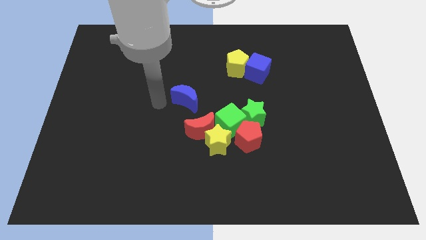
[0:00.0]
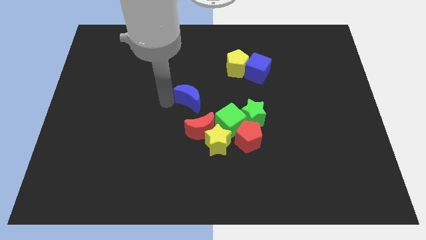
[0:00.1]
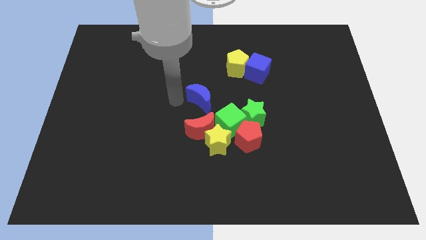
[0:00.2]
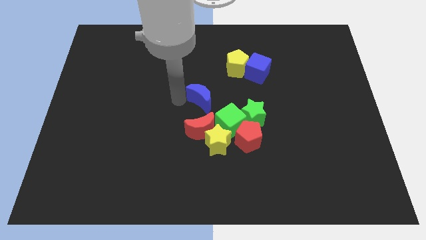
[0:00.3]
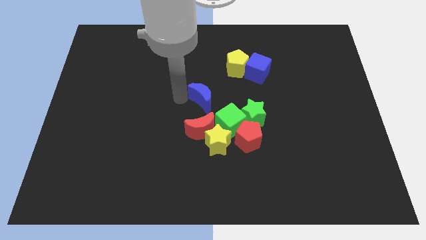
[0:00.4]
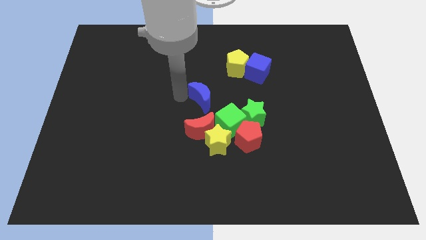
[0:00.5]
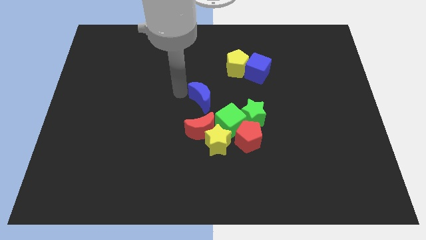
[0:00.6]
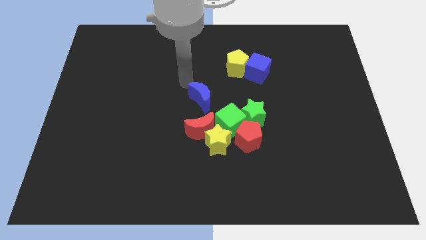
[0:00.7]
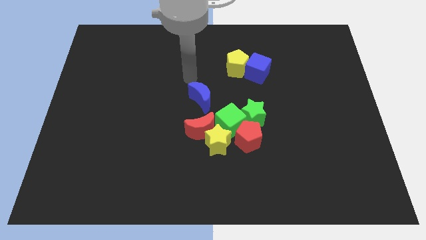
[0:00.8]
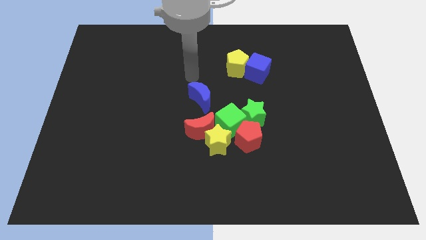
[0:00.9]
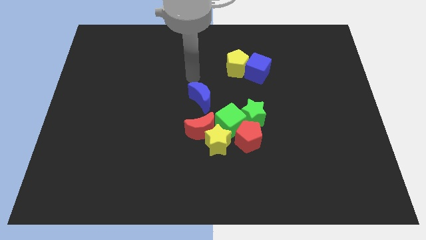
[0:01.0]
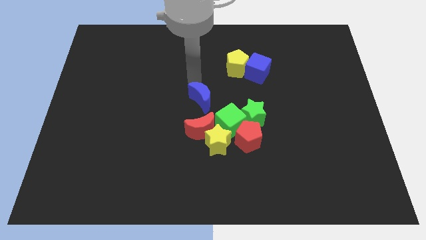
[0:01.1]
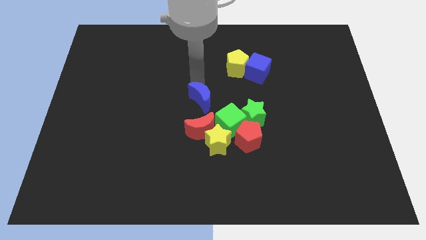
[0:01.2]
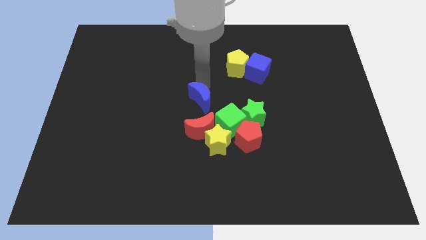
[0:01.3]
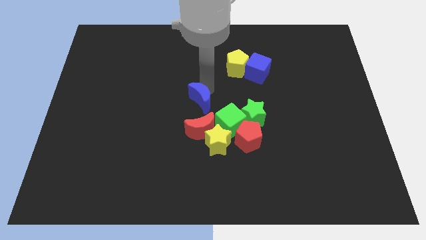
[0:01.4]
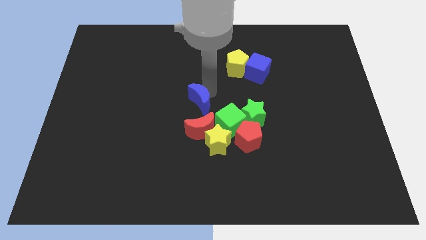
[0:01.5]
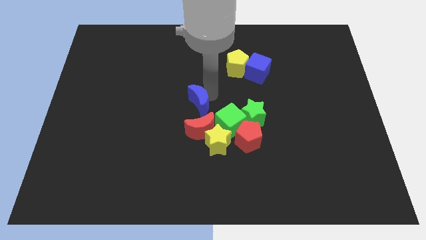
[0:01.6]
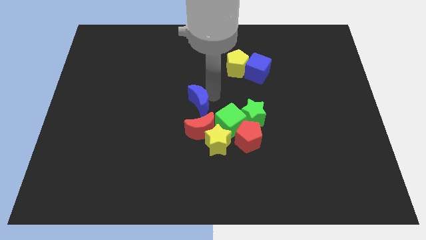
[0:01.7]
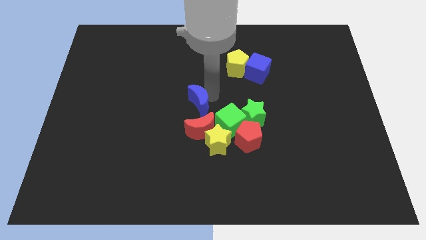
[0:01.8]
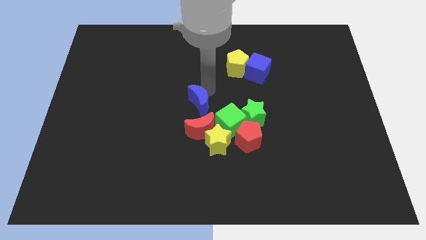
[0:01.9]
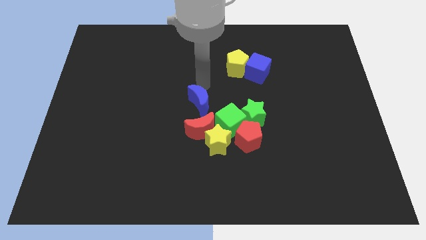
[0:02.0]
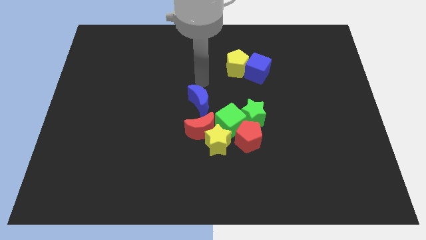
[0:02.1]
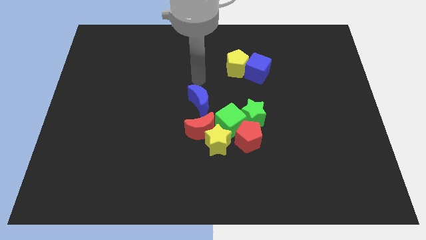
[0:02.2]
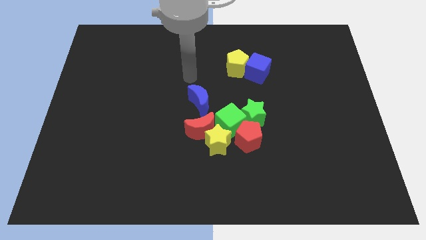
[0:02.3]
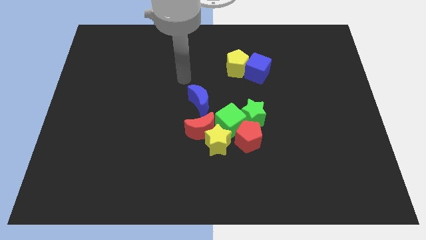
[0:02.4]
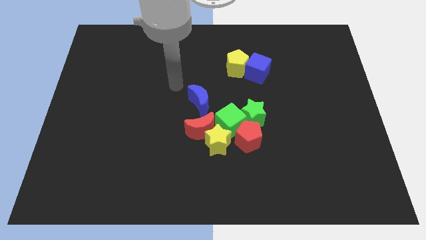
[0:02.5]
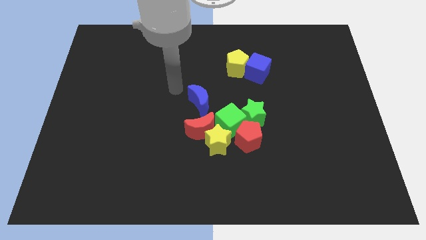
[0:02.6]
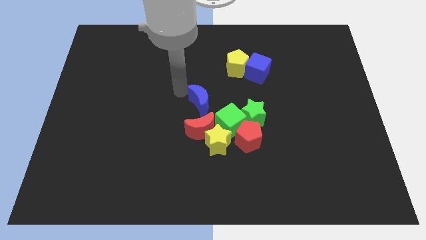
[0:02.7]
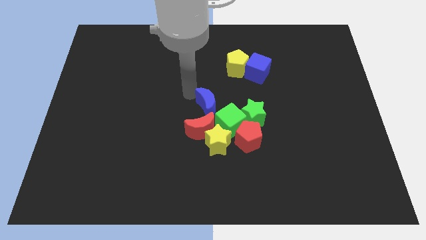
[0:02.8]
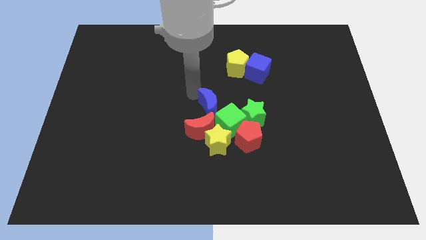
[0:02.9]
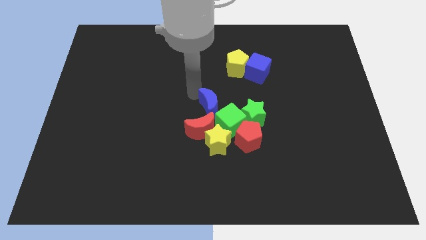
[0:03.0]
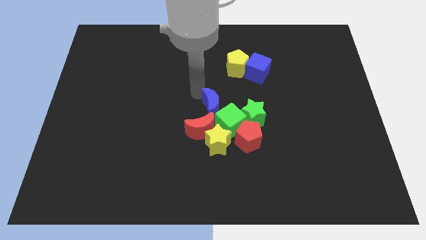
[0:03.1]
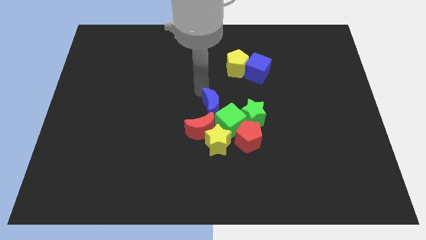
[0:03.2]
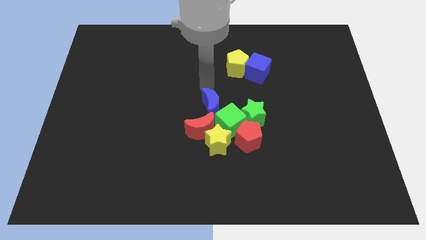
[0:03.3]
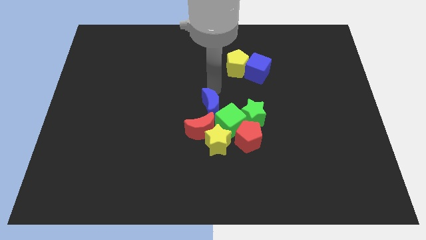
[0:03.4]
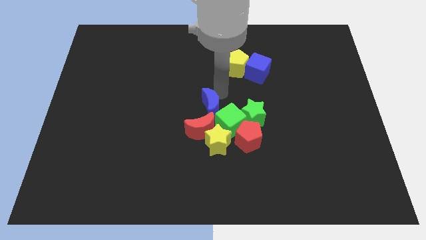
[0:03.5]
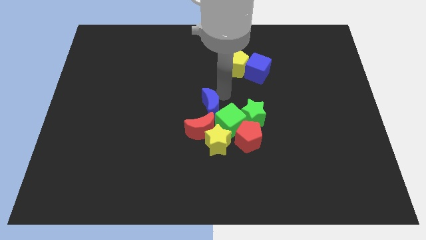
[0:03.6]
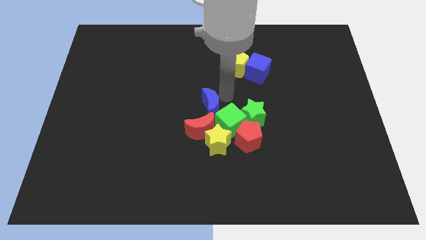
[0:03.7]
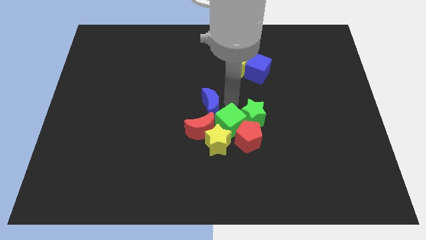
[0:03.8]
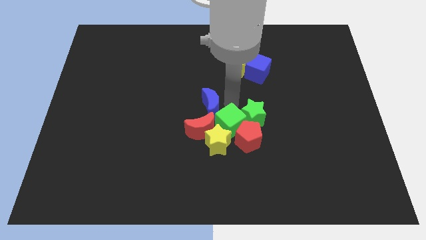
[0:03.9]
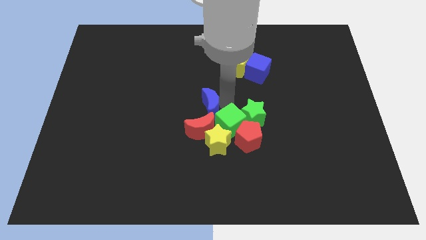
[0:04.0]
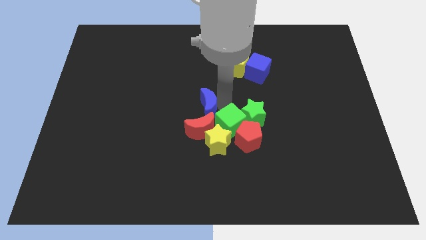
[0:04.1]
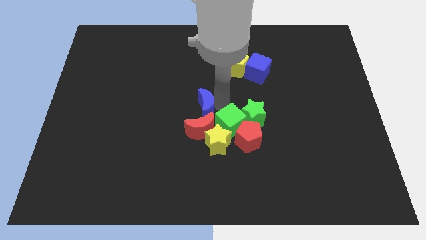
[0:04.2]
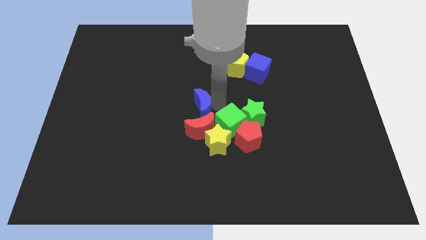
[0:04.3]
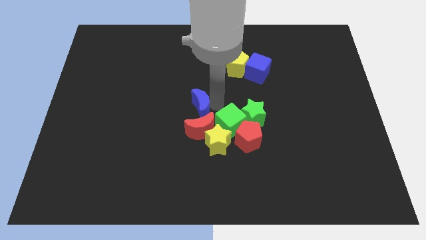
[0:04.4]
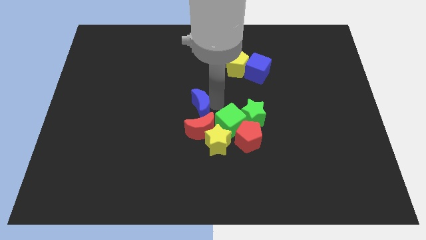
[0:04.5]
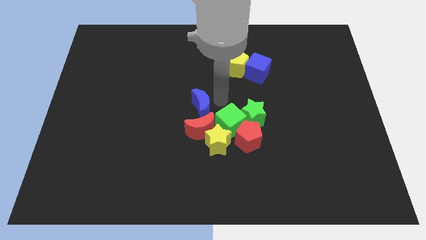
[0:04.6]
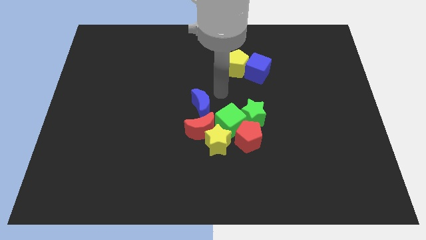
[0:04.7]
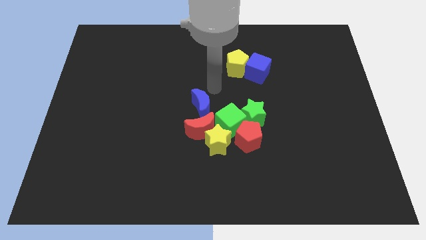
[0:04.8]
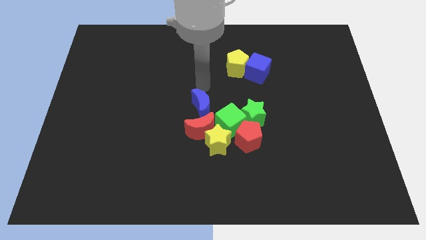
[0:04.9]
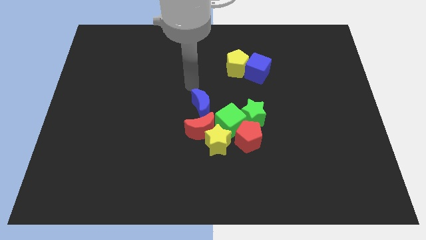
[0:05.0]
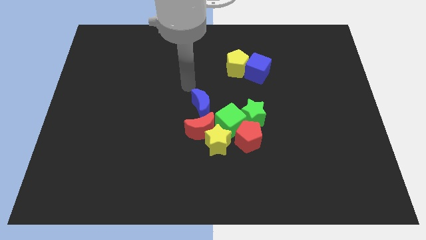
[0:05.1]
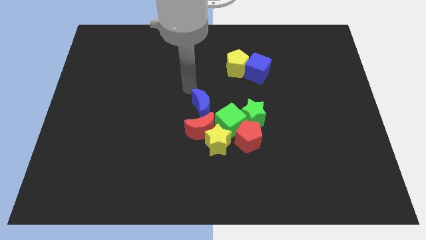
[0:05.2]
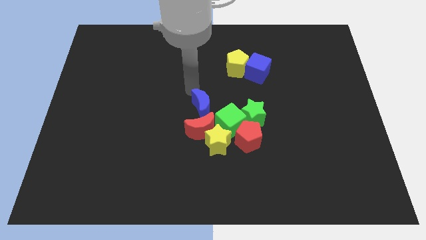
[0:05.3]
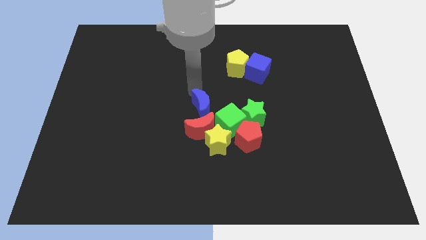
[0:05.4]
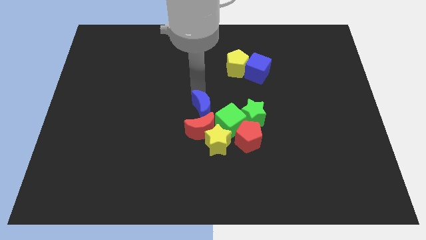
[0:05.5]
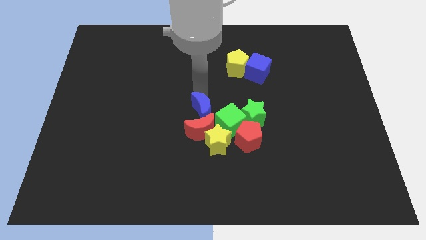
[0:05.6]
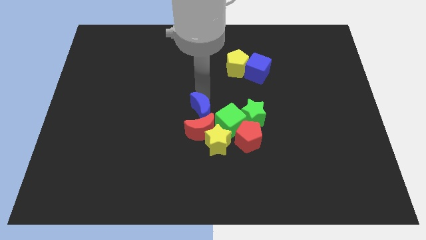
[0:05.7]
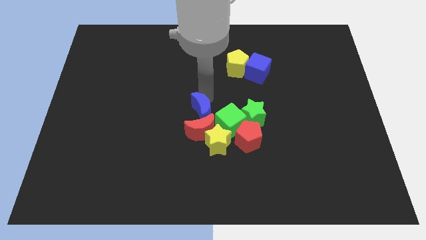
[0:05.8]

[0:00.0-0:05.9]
move the blue crescent above the red crescent

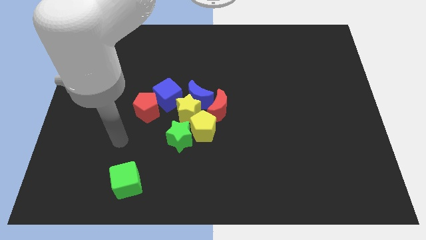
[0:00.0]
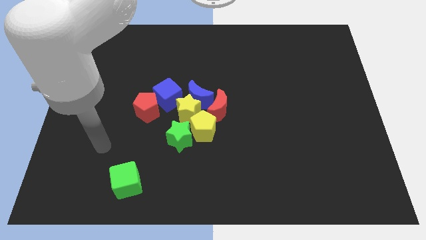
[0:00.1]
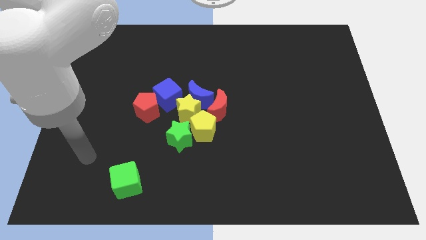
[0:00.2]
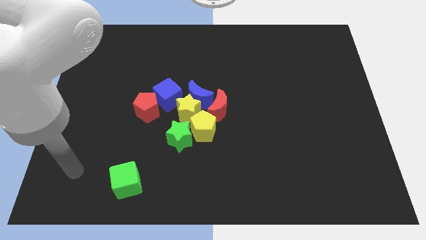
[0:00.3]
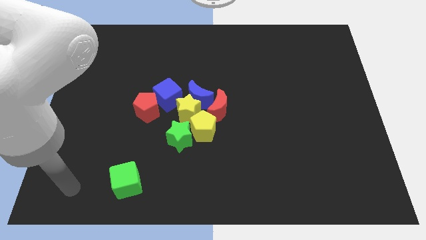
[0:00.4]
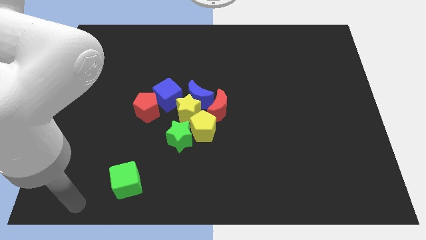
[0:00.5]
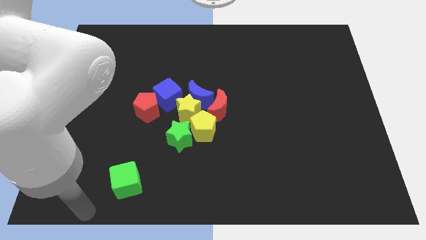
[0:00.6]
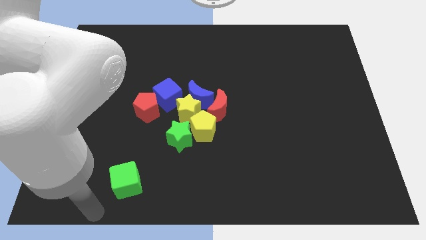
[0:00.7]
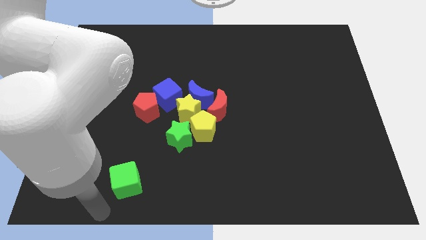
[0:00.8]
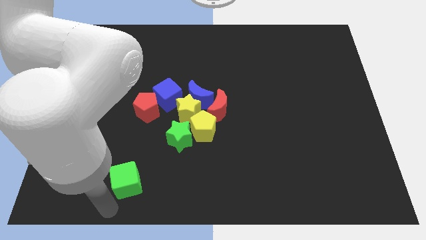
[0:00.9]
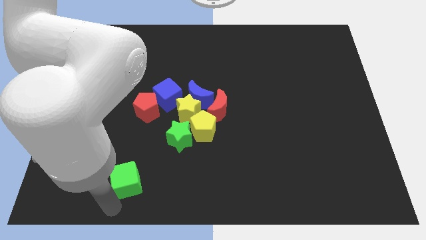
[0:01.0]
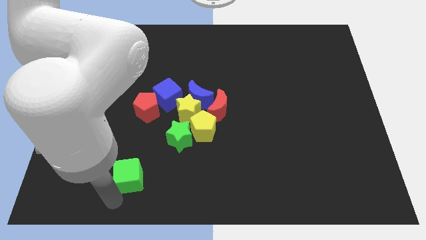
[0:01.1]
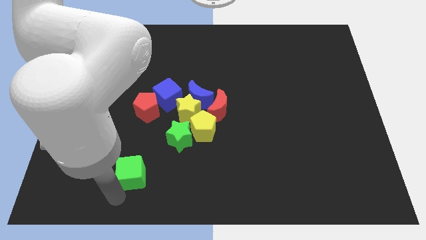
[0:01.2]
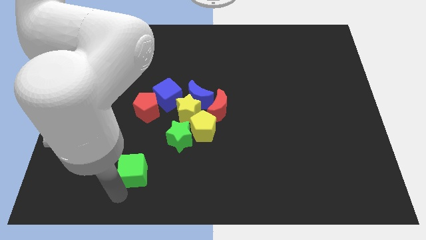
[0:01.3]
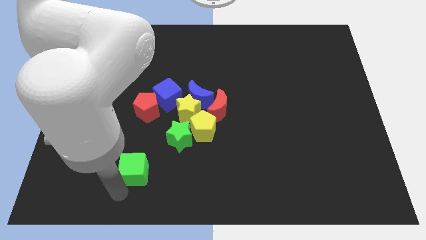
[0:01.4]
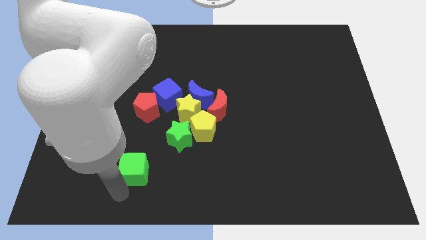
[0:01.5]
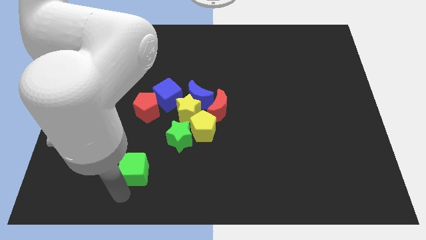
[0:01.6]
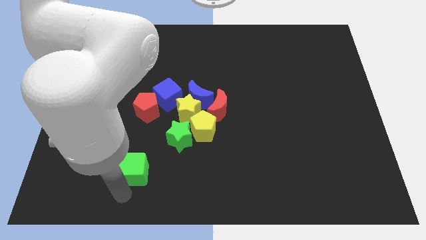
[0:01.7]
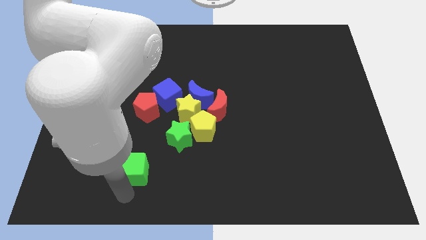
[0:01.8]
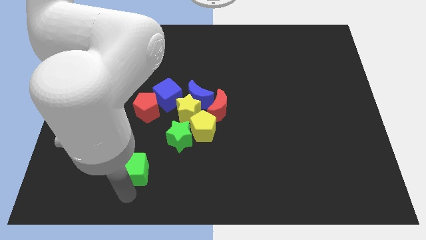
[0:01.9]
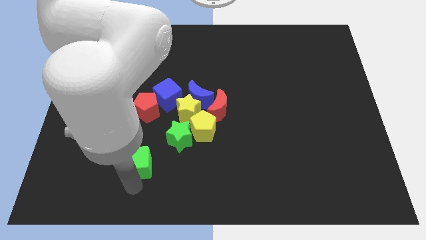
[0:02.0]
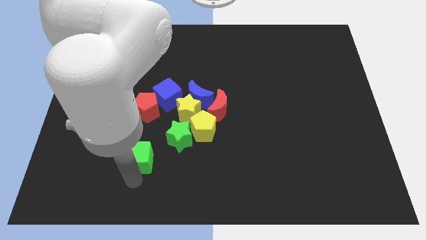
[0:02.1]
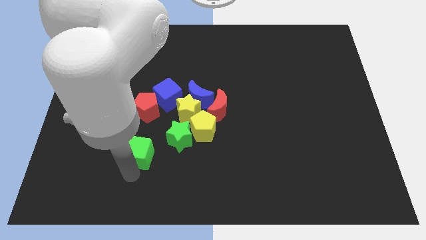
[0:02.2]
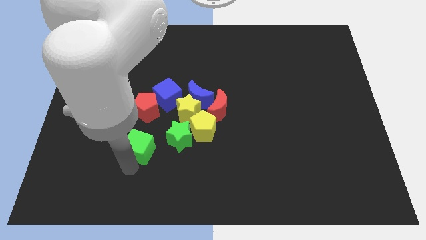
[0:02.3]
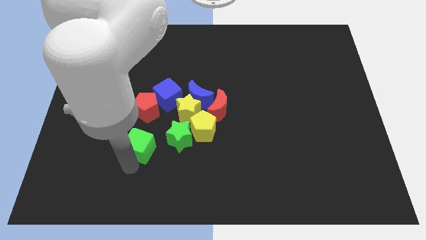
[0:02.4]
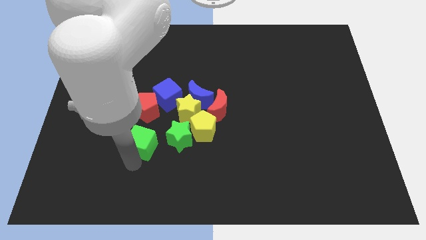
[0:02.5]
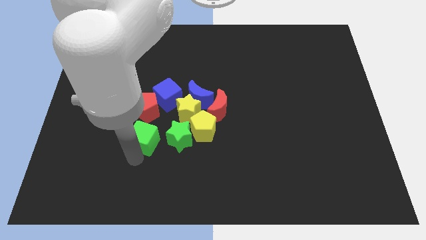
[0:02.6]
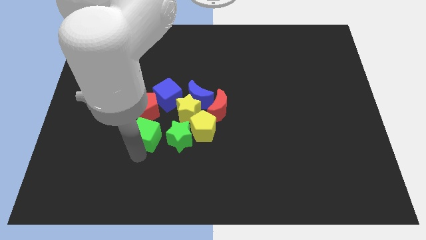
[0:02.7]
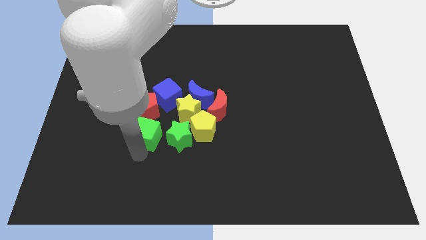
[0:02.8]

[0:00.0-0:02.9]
push the green cube to the left of the green star
